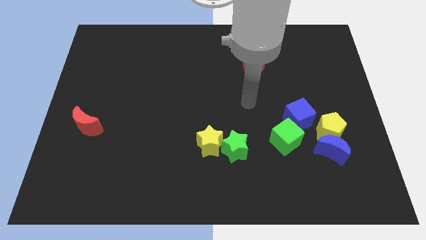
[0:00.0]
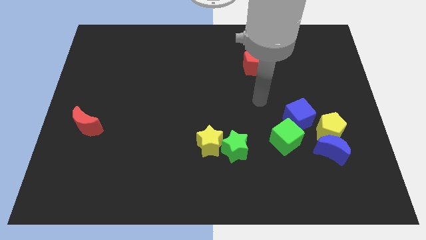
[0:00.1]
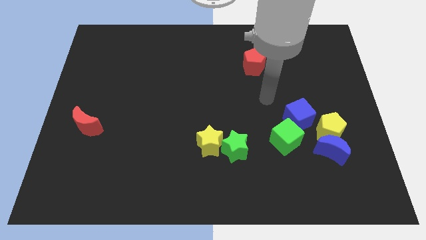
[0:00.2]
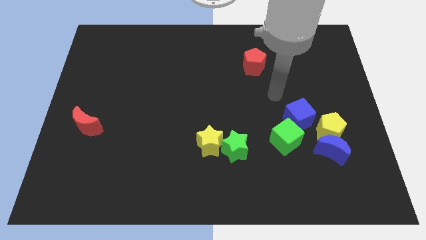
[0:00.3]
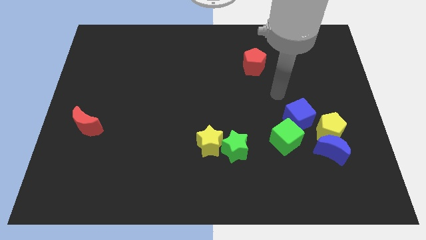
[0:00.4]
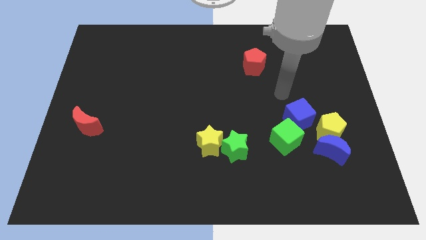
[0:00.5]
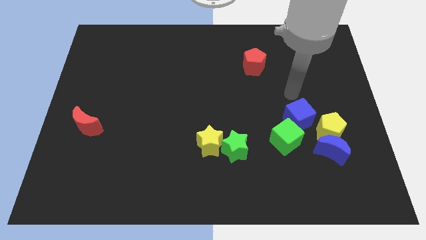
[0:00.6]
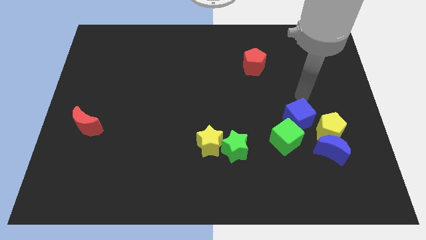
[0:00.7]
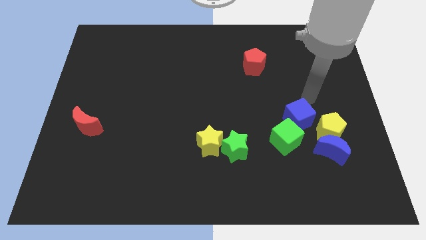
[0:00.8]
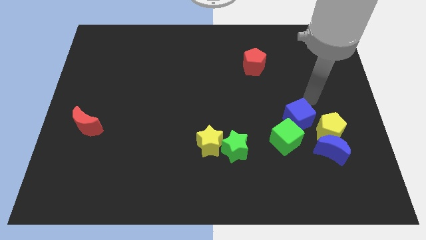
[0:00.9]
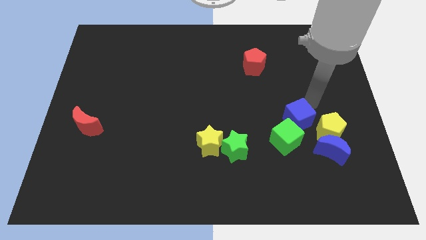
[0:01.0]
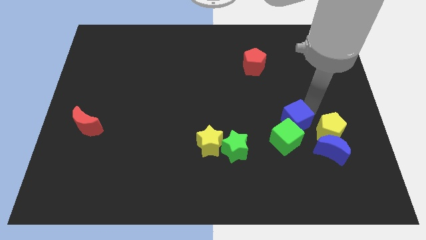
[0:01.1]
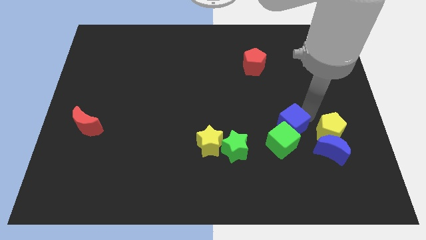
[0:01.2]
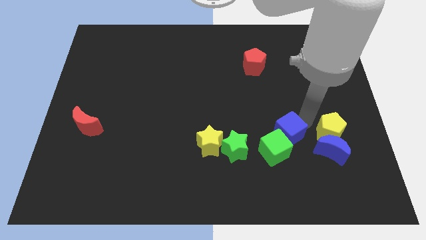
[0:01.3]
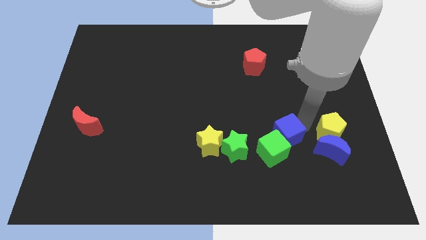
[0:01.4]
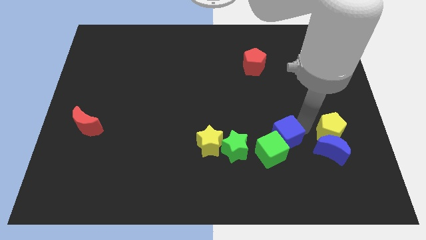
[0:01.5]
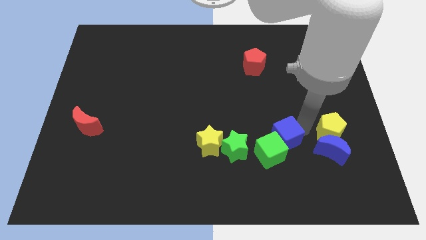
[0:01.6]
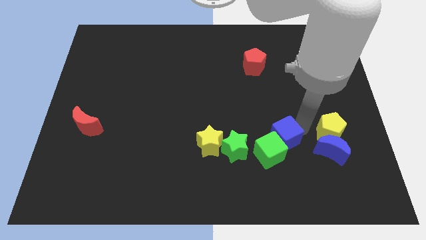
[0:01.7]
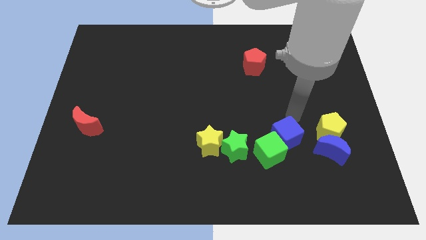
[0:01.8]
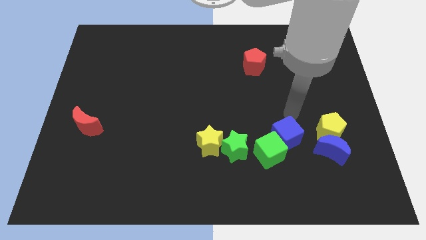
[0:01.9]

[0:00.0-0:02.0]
move the blue cube into the green cube

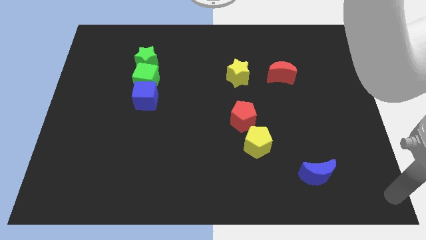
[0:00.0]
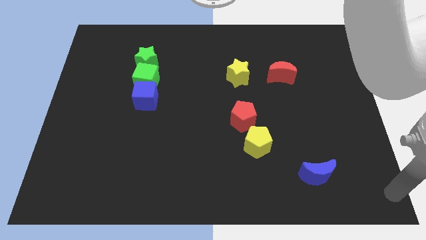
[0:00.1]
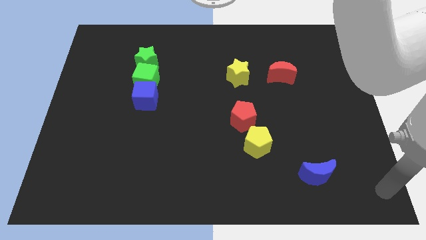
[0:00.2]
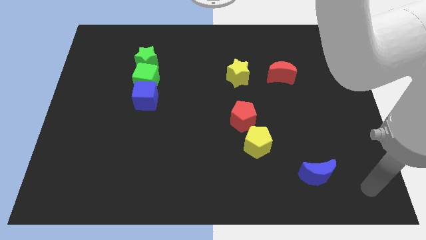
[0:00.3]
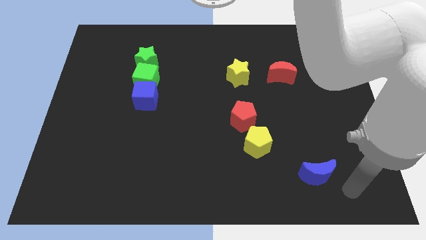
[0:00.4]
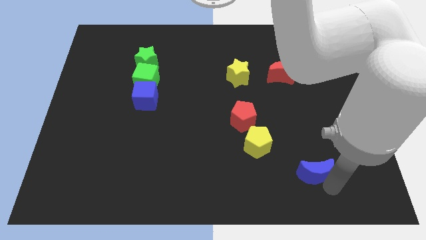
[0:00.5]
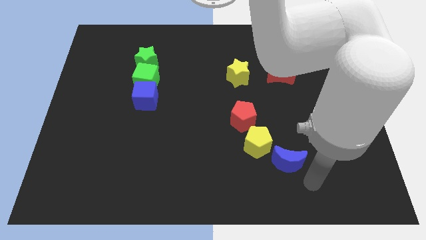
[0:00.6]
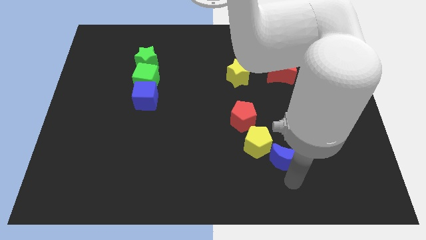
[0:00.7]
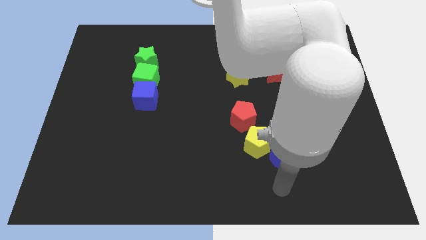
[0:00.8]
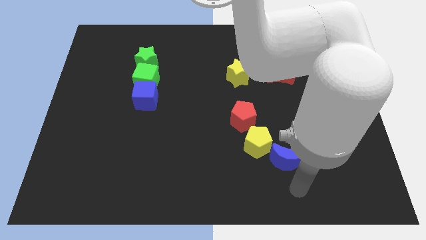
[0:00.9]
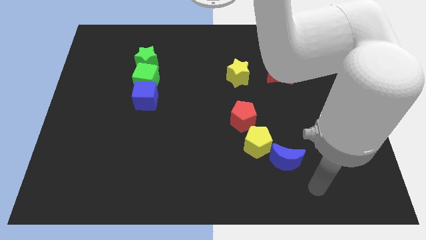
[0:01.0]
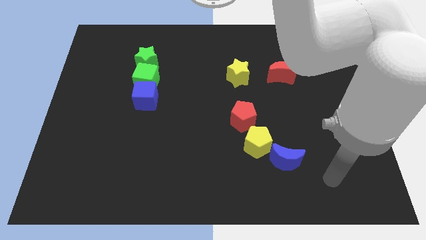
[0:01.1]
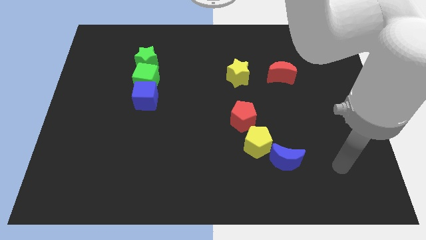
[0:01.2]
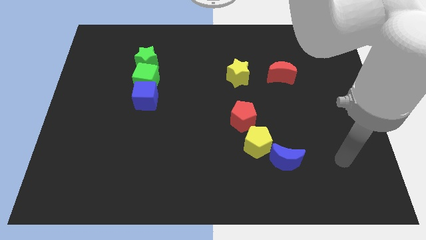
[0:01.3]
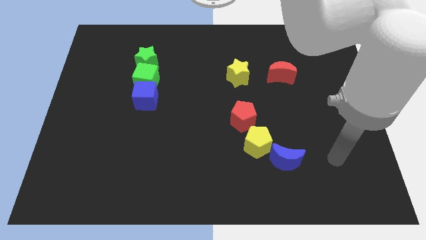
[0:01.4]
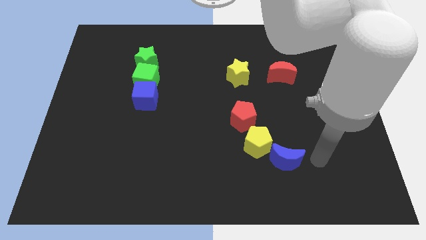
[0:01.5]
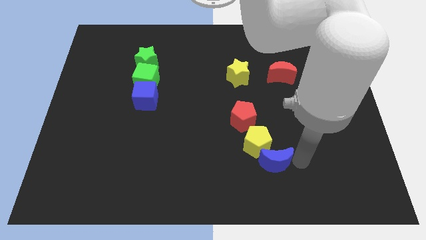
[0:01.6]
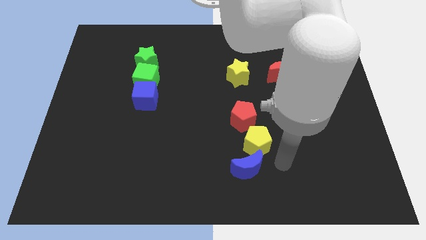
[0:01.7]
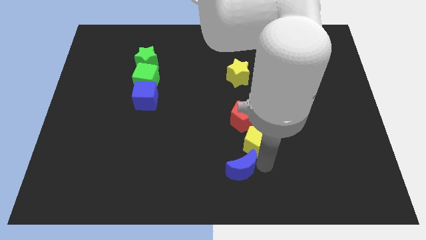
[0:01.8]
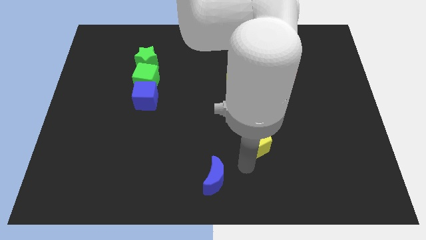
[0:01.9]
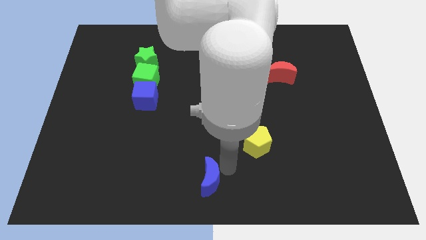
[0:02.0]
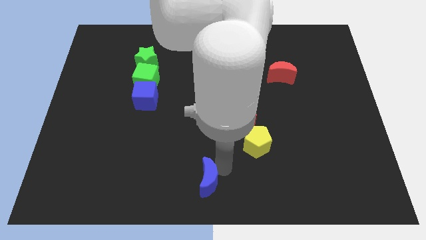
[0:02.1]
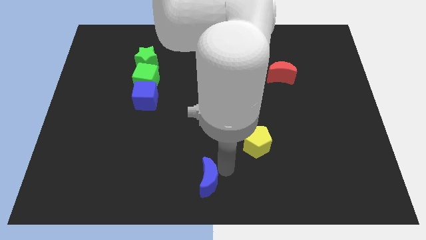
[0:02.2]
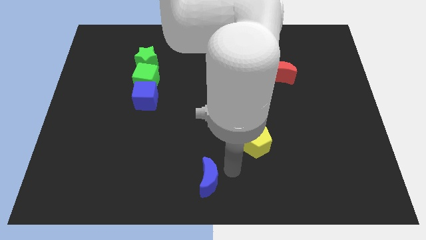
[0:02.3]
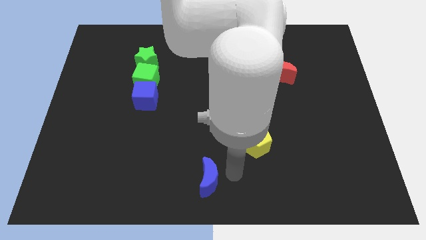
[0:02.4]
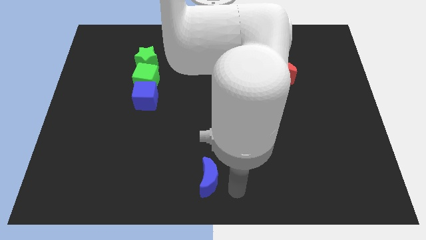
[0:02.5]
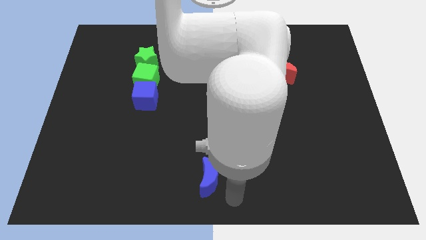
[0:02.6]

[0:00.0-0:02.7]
push the blue moon towards the left side of the board

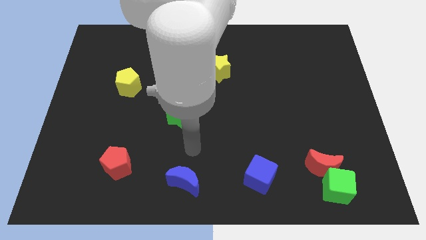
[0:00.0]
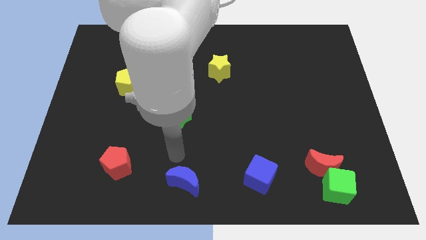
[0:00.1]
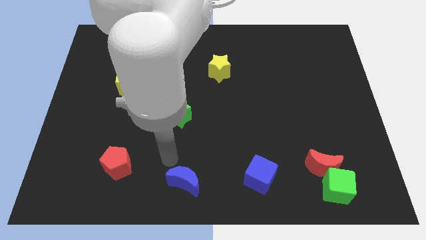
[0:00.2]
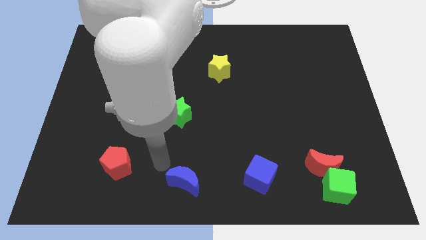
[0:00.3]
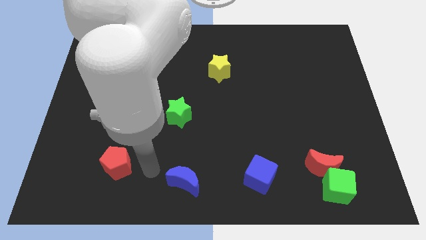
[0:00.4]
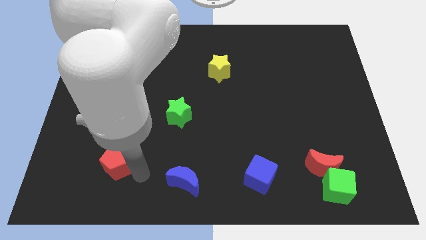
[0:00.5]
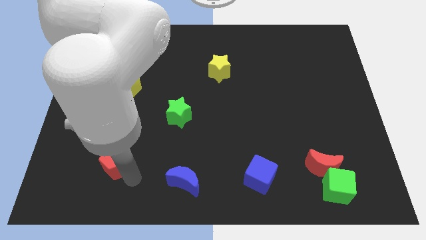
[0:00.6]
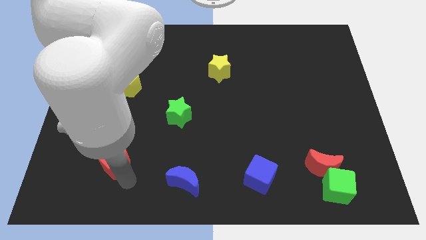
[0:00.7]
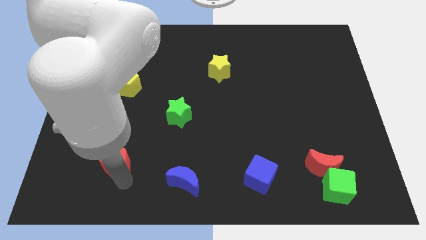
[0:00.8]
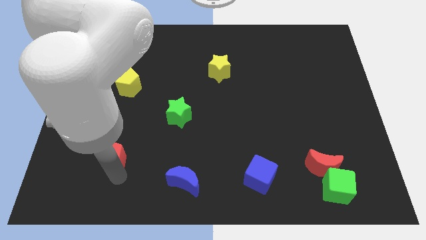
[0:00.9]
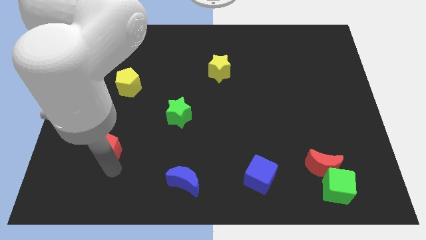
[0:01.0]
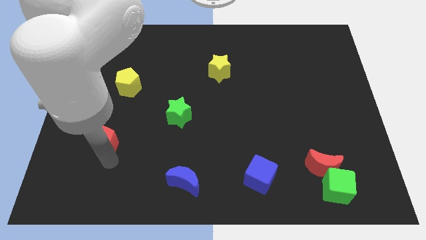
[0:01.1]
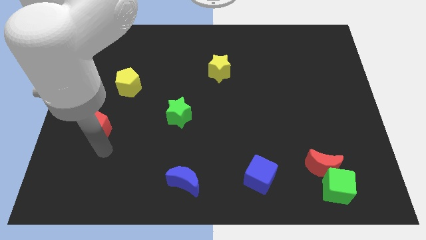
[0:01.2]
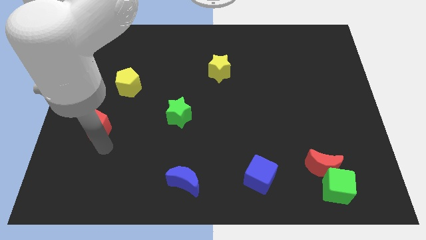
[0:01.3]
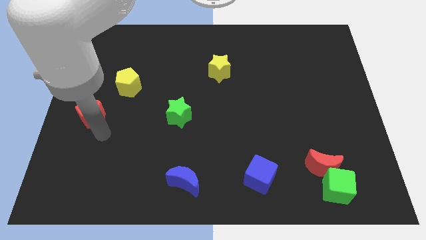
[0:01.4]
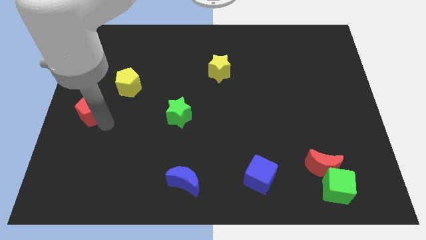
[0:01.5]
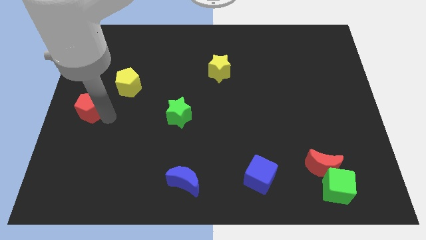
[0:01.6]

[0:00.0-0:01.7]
place the red pentagon to left center of the board

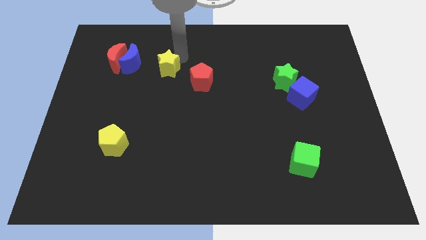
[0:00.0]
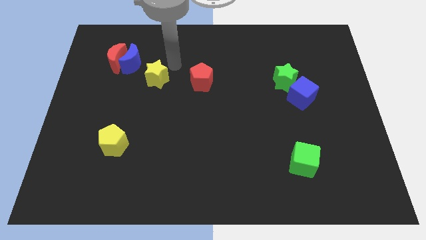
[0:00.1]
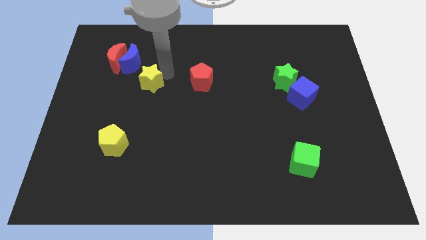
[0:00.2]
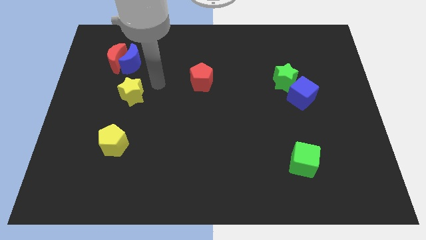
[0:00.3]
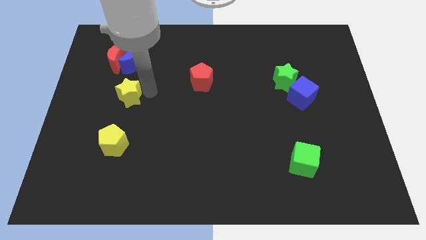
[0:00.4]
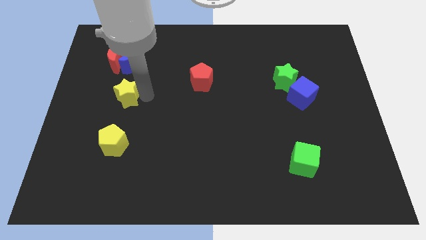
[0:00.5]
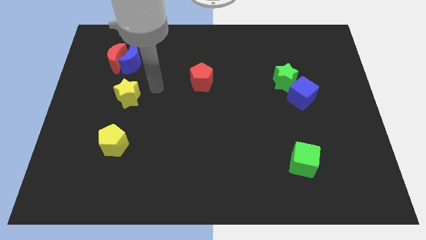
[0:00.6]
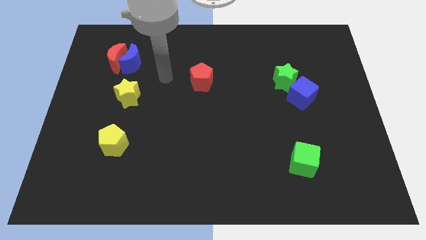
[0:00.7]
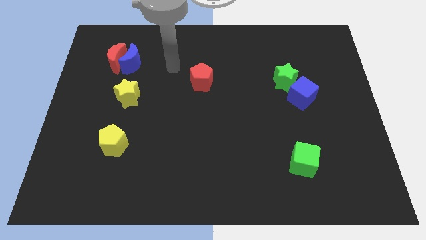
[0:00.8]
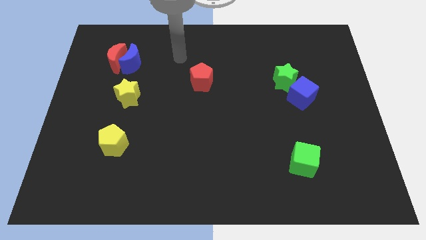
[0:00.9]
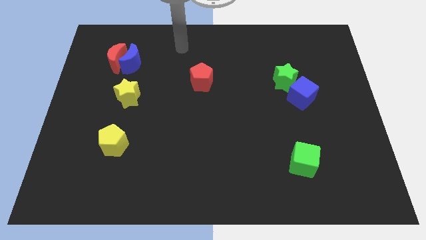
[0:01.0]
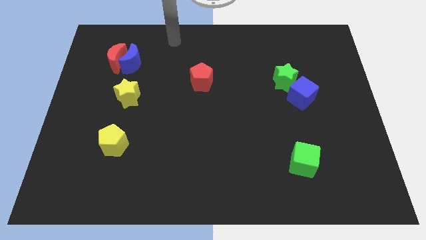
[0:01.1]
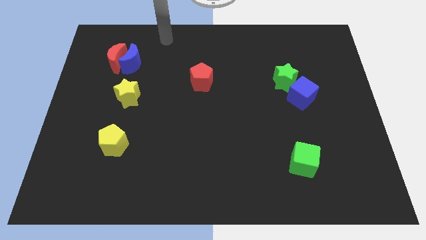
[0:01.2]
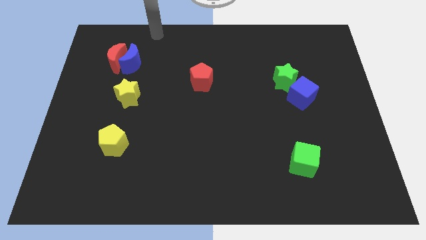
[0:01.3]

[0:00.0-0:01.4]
place yellow star in between the blue moon and yellow pentagon

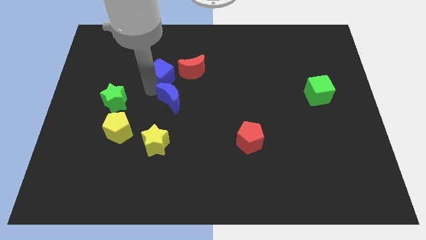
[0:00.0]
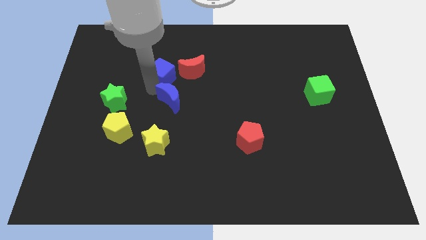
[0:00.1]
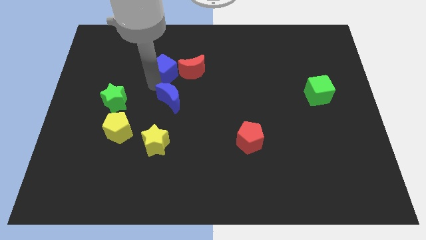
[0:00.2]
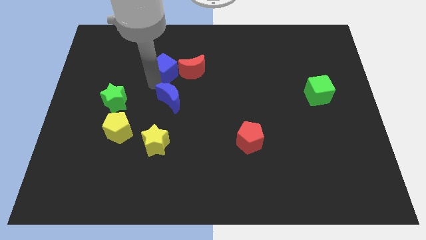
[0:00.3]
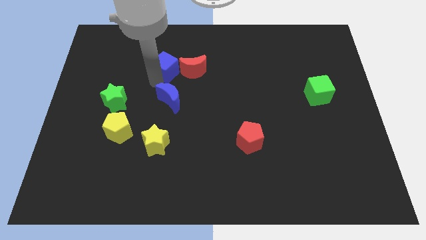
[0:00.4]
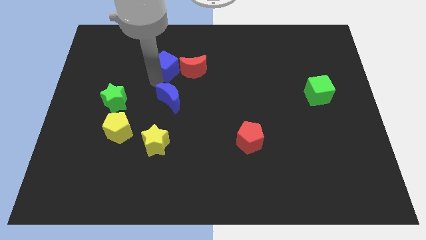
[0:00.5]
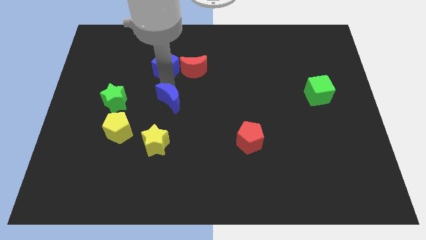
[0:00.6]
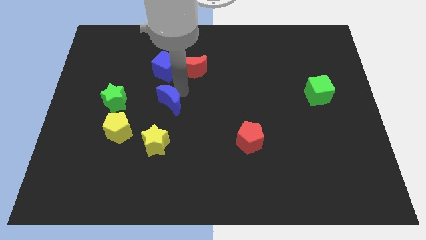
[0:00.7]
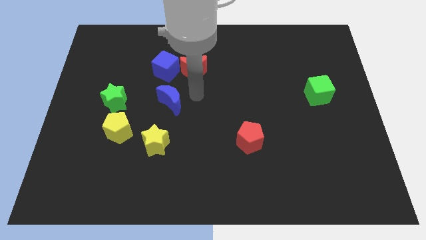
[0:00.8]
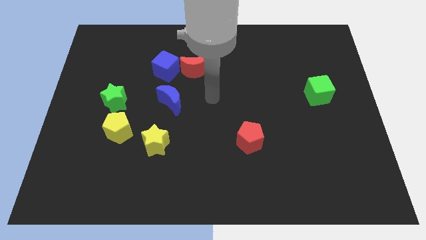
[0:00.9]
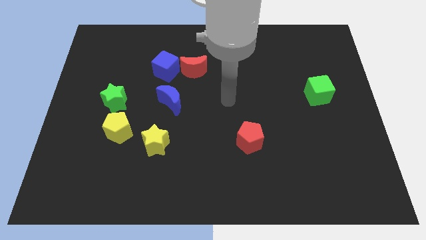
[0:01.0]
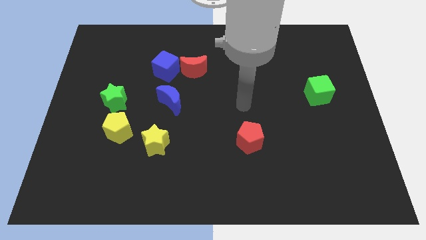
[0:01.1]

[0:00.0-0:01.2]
move your arm to the center of the board
